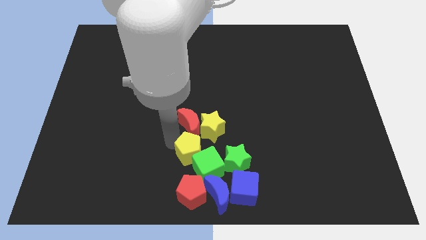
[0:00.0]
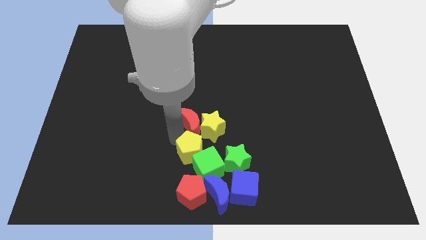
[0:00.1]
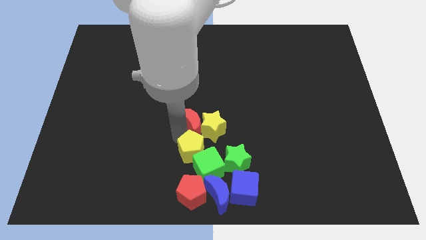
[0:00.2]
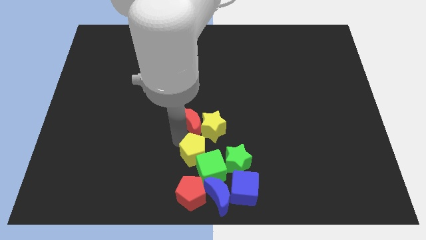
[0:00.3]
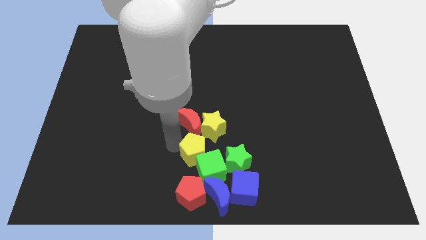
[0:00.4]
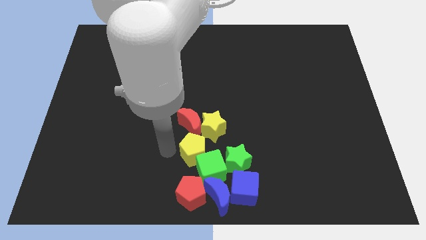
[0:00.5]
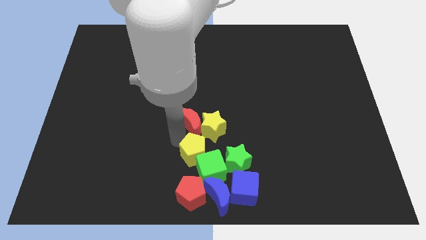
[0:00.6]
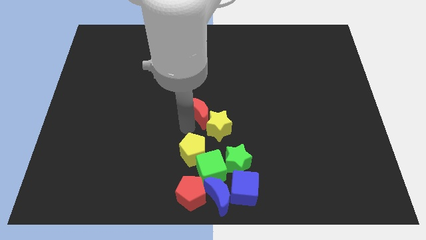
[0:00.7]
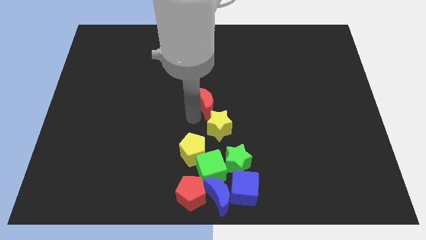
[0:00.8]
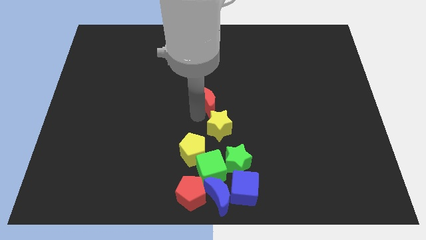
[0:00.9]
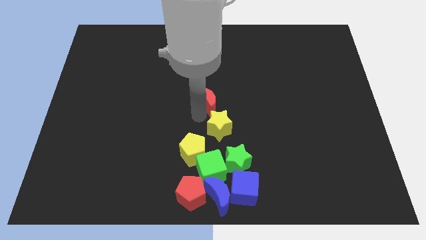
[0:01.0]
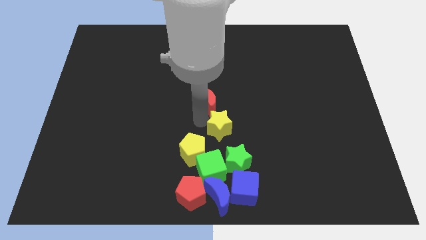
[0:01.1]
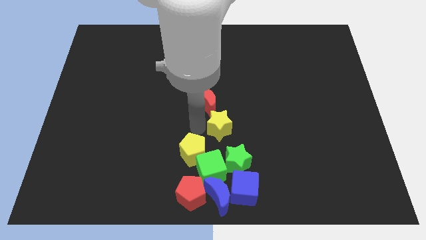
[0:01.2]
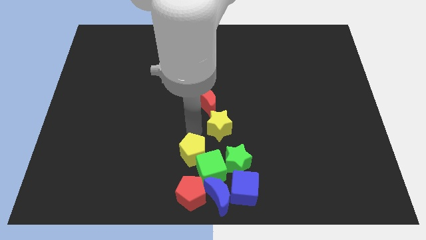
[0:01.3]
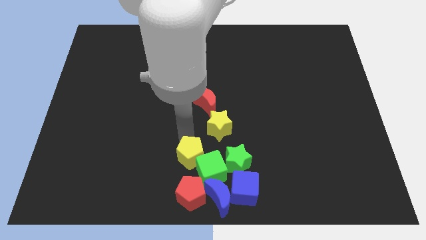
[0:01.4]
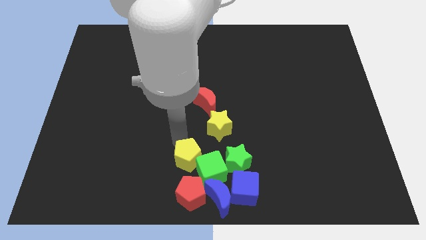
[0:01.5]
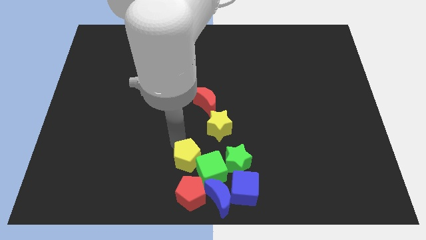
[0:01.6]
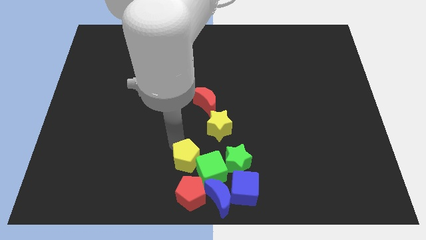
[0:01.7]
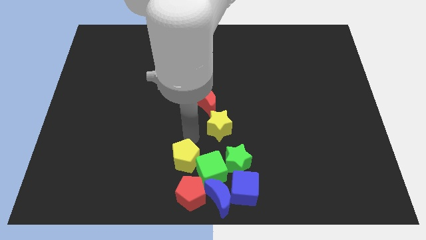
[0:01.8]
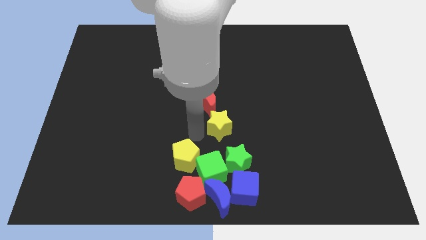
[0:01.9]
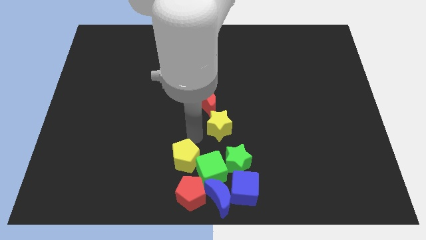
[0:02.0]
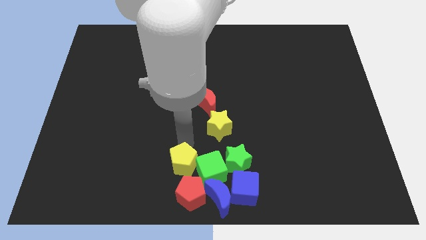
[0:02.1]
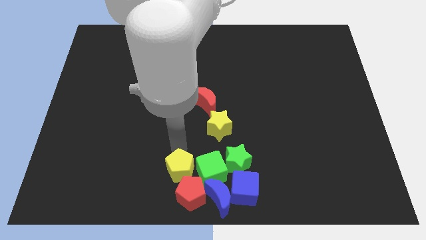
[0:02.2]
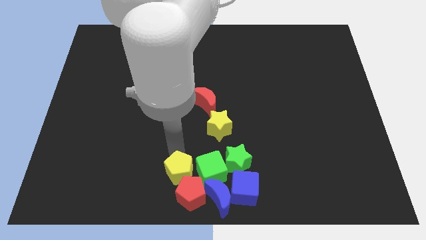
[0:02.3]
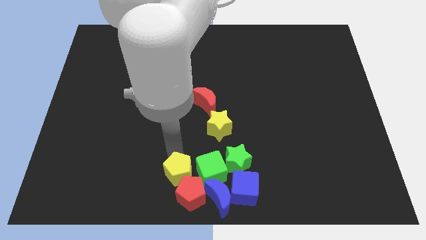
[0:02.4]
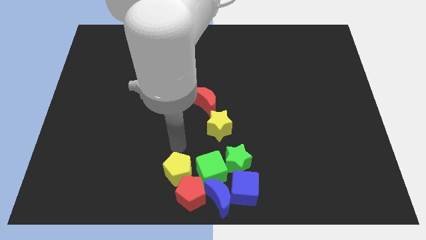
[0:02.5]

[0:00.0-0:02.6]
move the yellow pentagon above the red pentagon

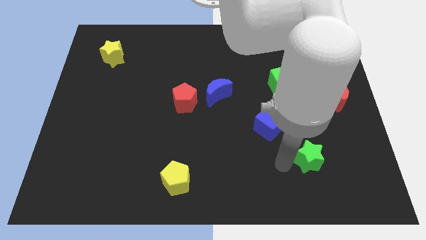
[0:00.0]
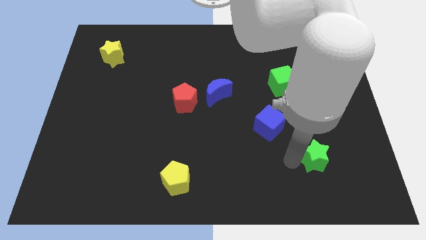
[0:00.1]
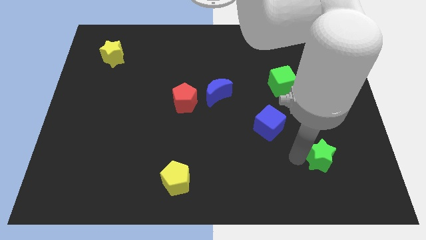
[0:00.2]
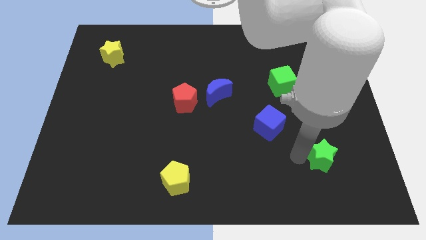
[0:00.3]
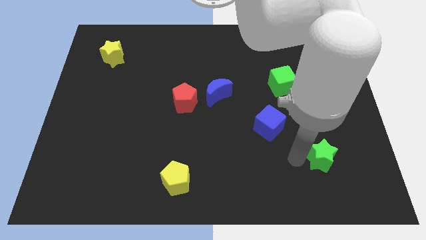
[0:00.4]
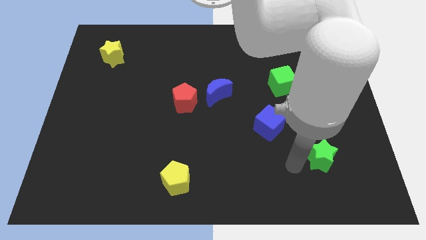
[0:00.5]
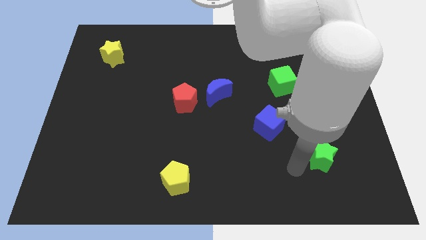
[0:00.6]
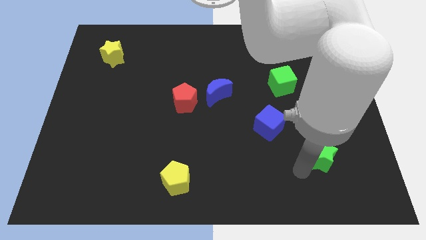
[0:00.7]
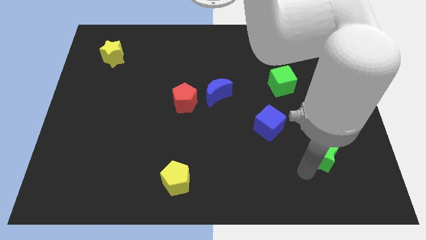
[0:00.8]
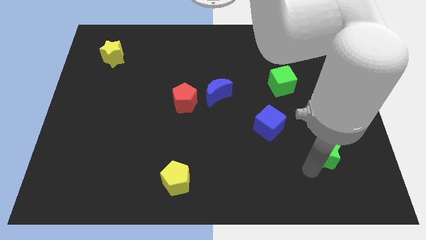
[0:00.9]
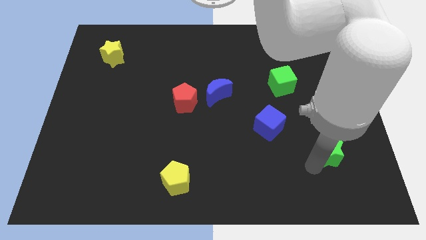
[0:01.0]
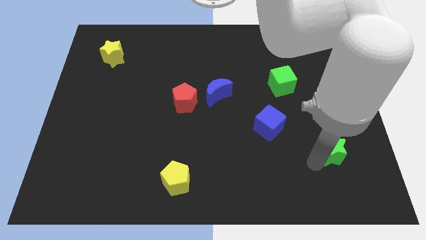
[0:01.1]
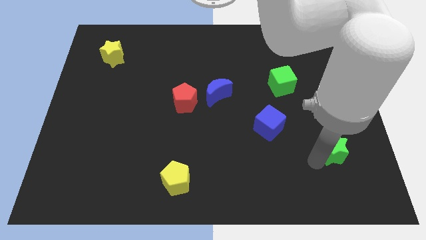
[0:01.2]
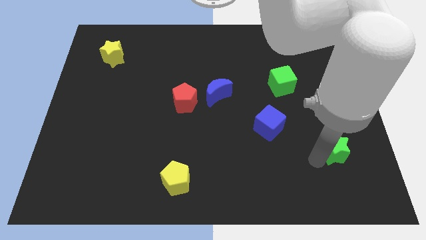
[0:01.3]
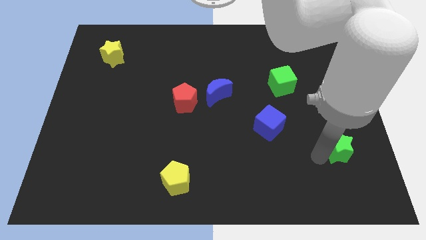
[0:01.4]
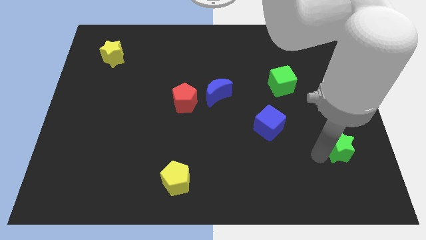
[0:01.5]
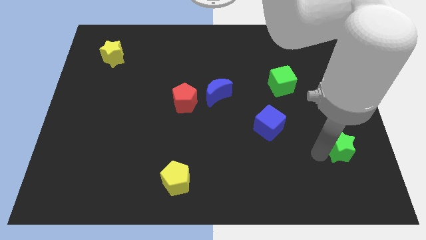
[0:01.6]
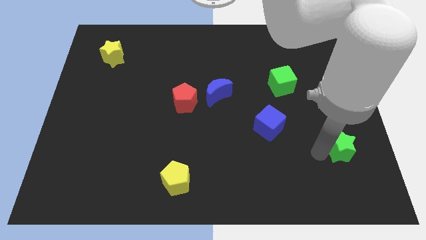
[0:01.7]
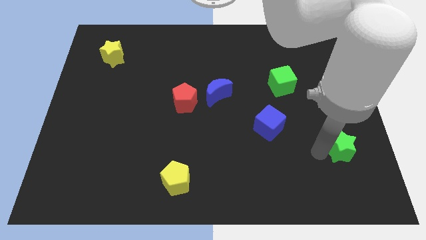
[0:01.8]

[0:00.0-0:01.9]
push the green star below the red crescent

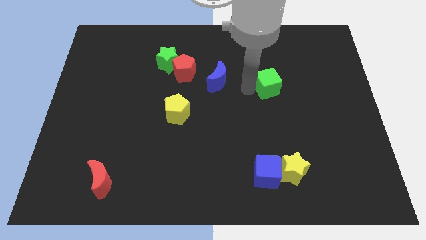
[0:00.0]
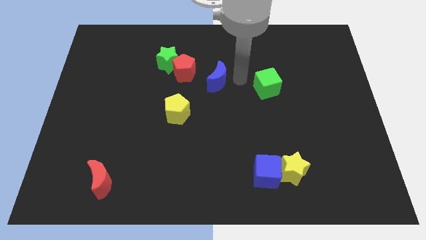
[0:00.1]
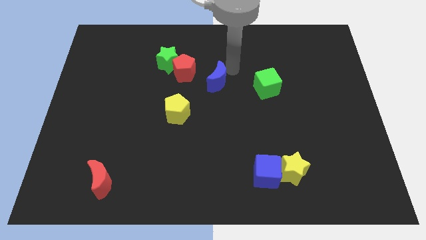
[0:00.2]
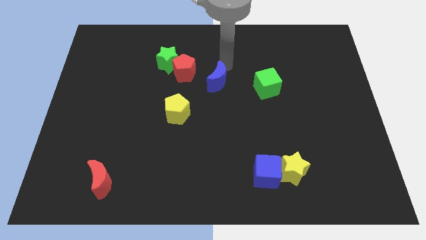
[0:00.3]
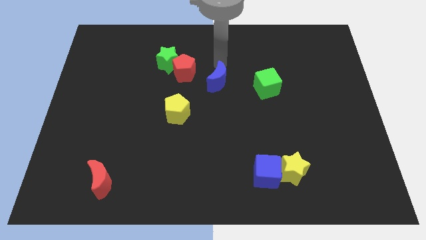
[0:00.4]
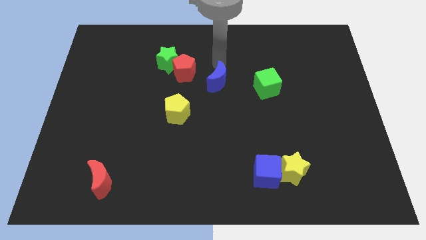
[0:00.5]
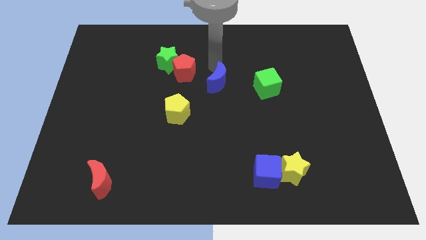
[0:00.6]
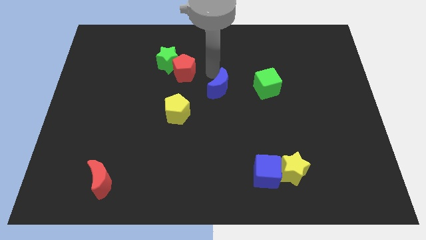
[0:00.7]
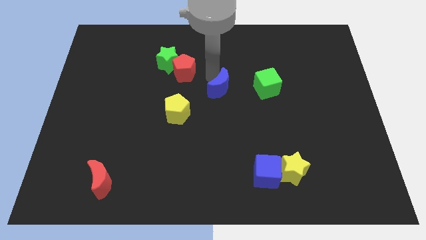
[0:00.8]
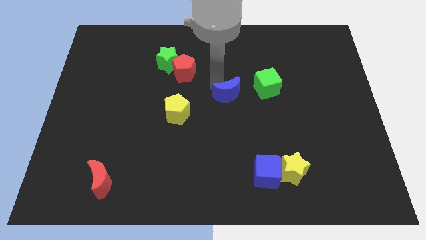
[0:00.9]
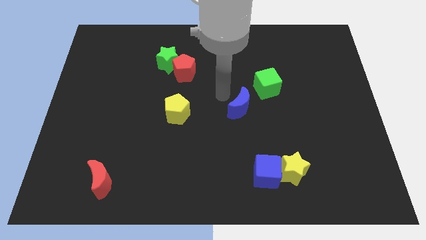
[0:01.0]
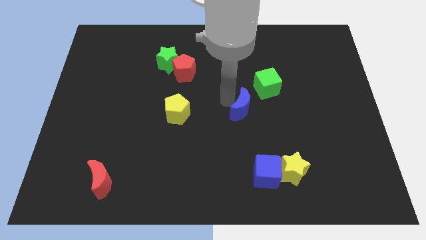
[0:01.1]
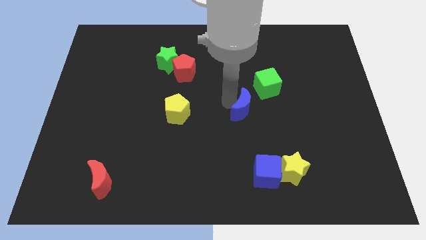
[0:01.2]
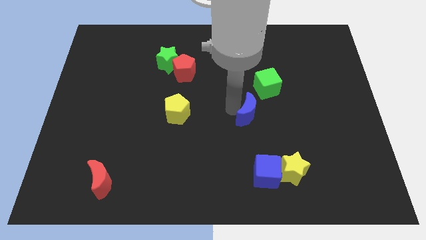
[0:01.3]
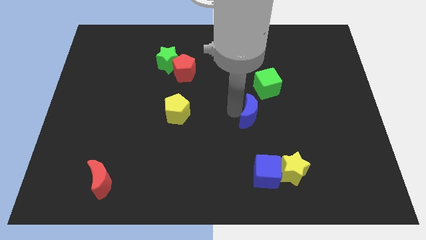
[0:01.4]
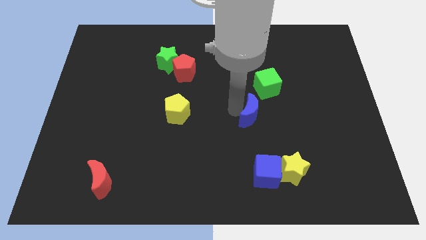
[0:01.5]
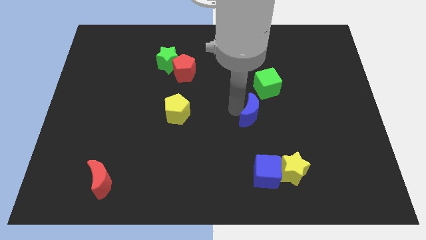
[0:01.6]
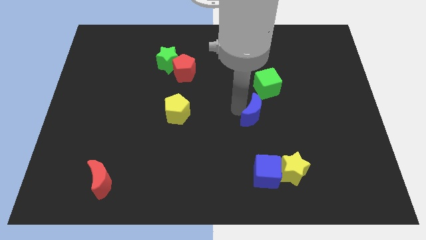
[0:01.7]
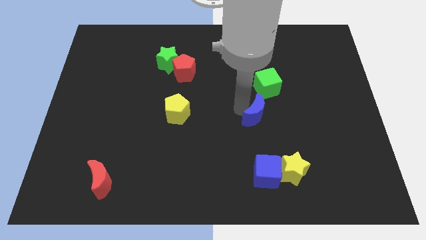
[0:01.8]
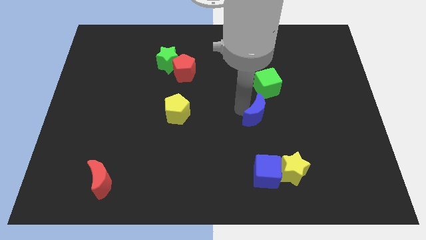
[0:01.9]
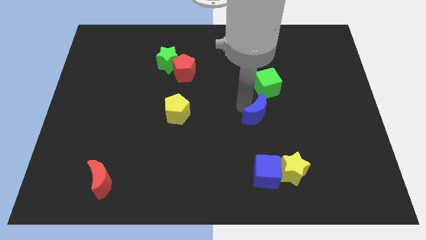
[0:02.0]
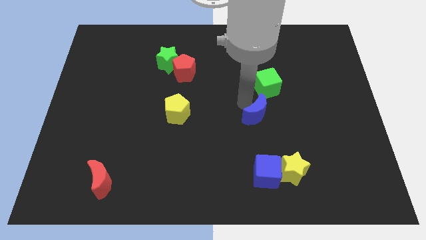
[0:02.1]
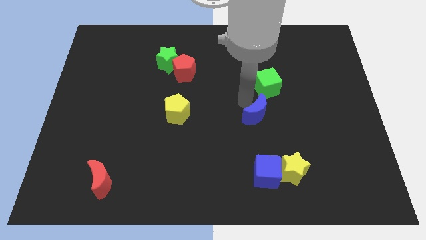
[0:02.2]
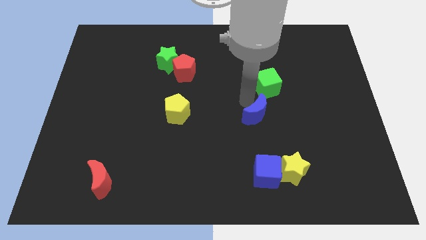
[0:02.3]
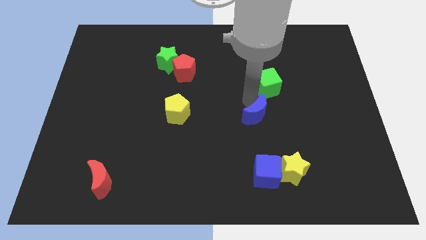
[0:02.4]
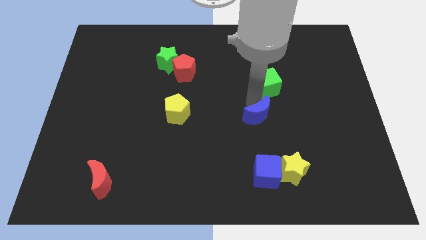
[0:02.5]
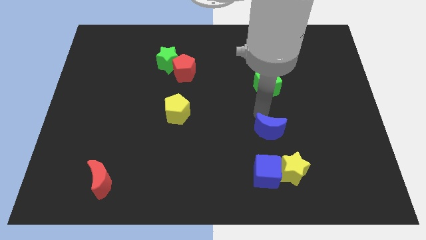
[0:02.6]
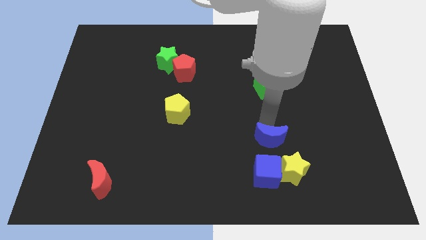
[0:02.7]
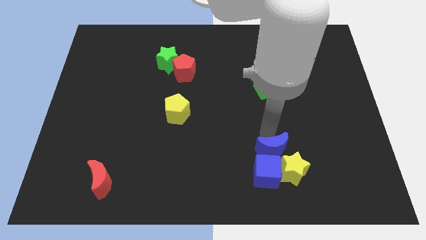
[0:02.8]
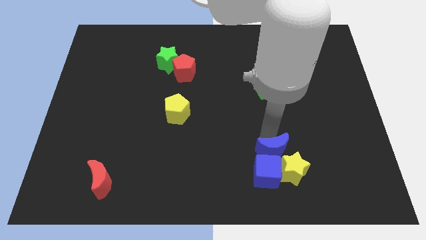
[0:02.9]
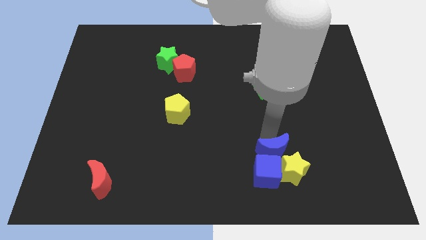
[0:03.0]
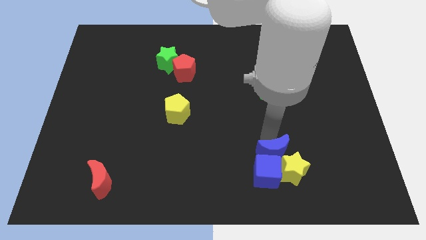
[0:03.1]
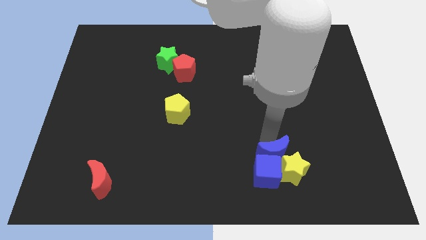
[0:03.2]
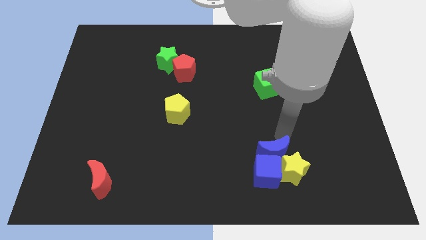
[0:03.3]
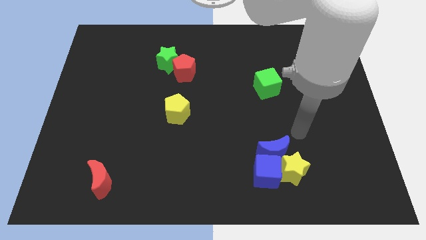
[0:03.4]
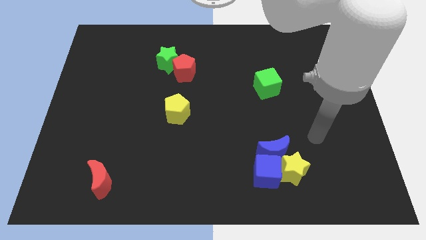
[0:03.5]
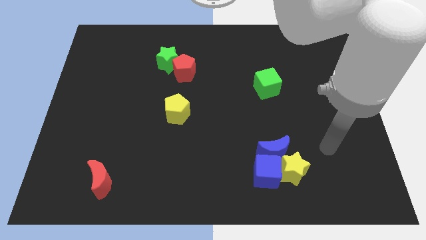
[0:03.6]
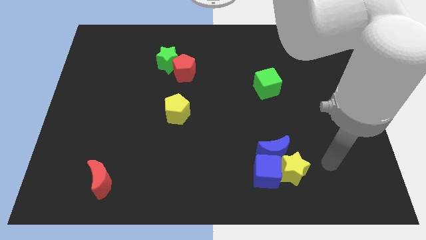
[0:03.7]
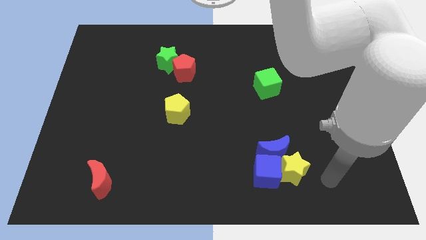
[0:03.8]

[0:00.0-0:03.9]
place the blue moon into the blue cube

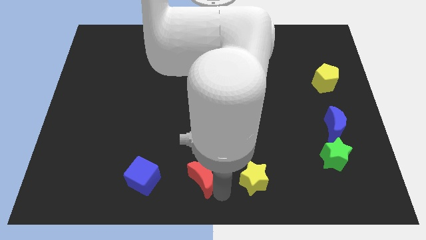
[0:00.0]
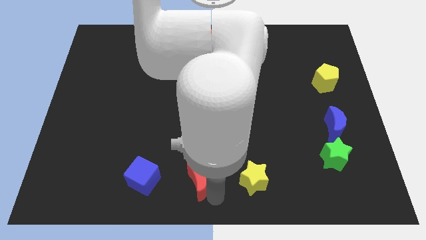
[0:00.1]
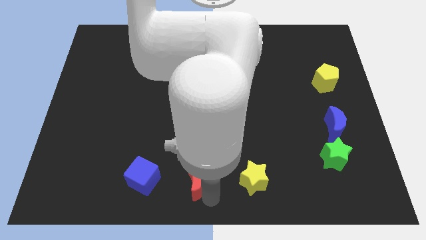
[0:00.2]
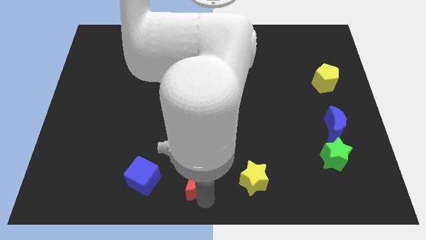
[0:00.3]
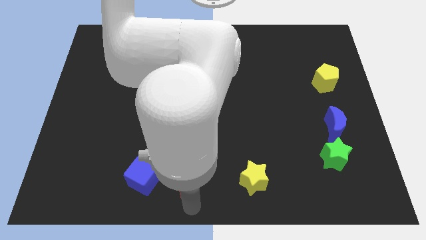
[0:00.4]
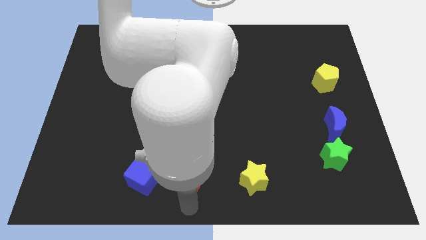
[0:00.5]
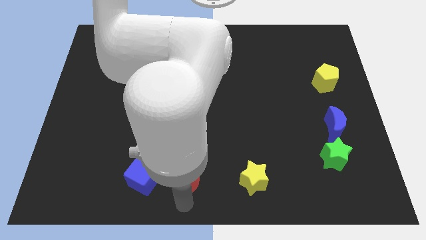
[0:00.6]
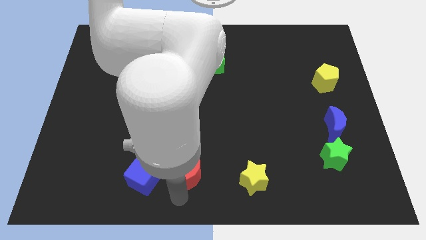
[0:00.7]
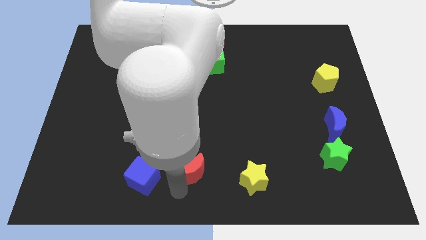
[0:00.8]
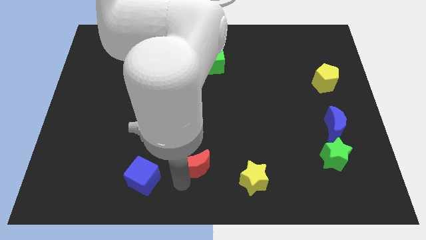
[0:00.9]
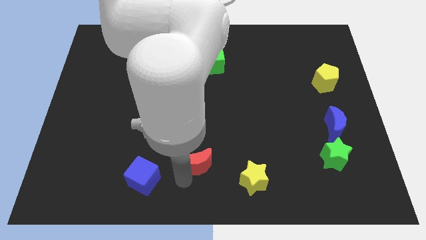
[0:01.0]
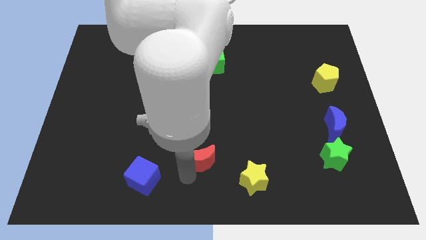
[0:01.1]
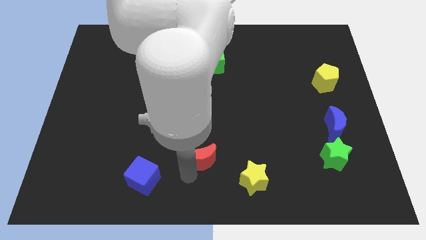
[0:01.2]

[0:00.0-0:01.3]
rotate the red moon
